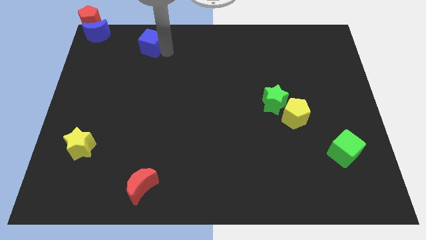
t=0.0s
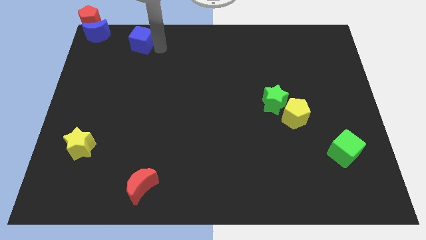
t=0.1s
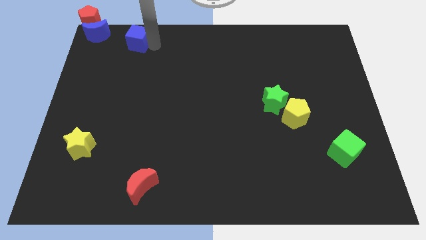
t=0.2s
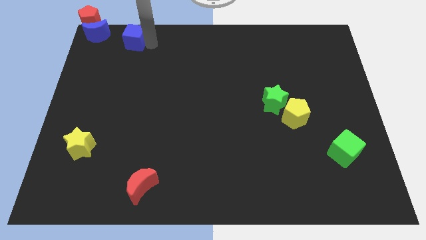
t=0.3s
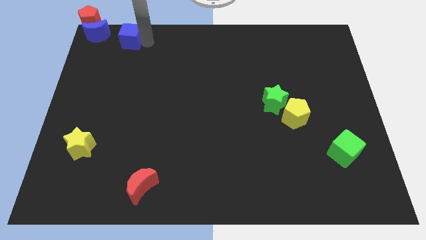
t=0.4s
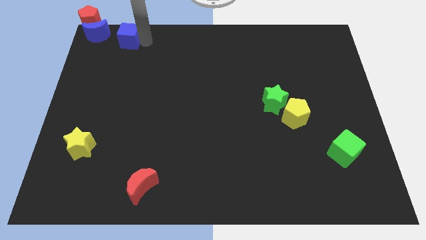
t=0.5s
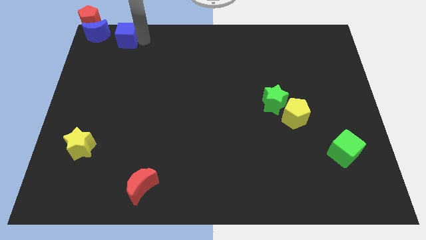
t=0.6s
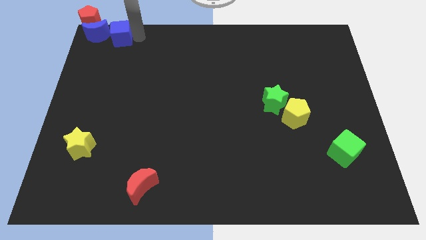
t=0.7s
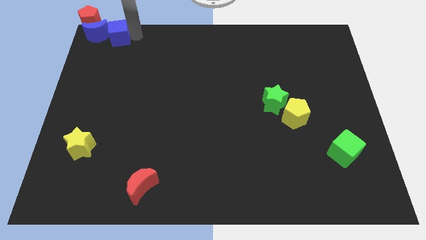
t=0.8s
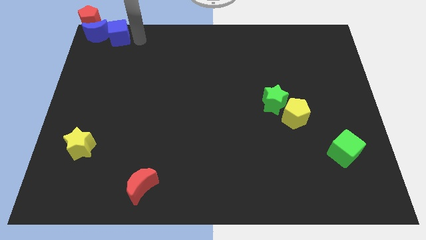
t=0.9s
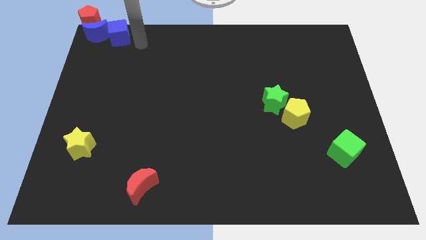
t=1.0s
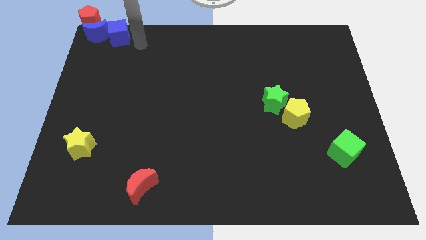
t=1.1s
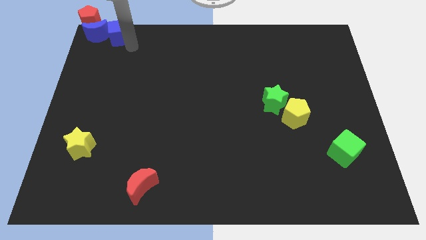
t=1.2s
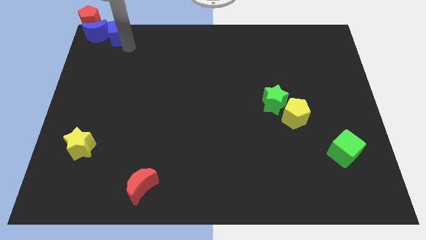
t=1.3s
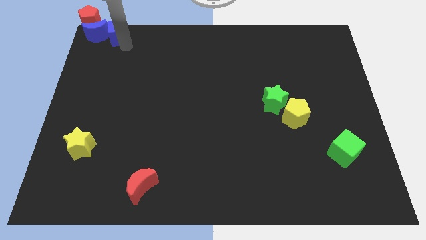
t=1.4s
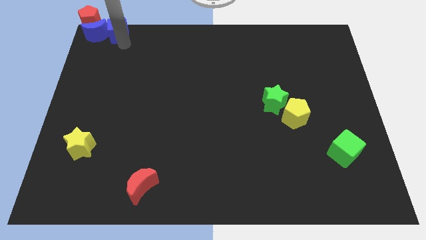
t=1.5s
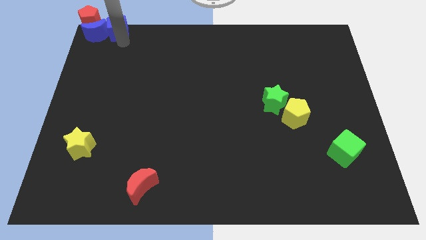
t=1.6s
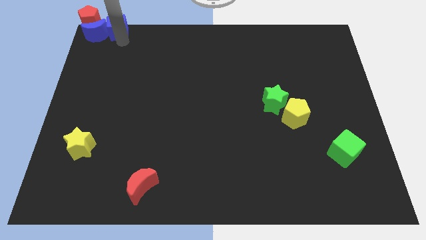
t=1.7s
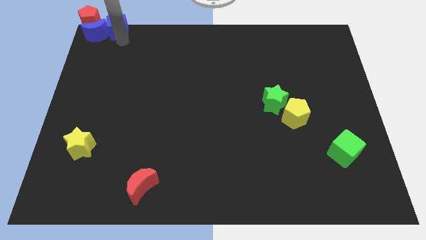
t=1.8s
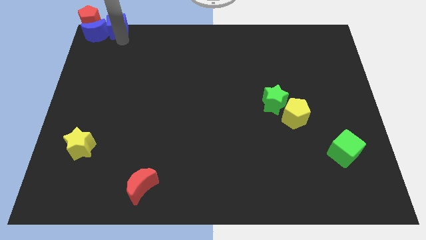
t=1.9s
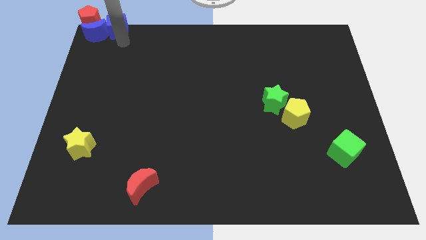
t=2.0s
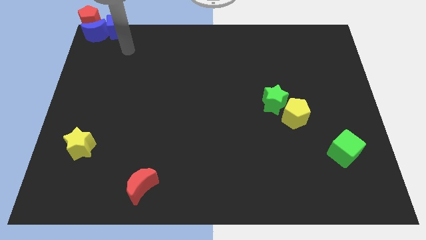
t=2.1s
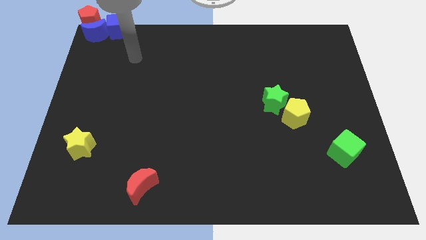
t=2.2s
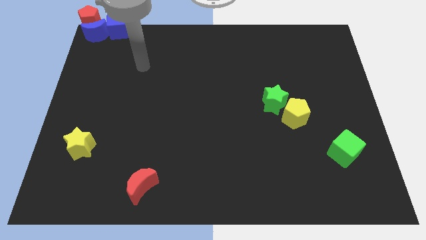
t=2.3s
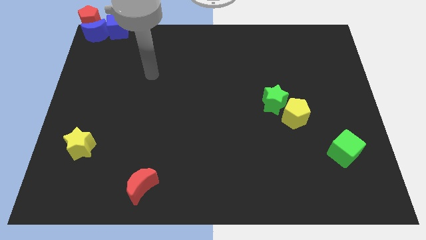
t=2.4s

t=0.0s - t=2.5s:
push the blue cube to the right of blue moon

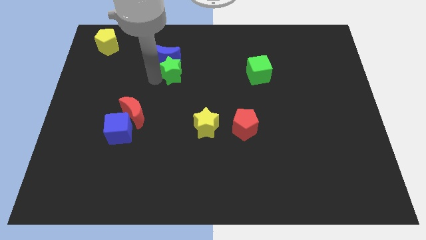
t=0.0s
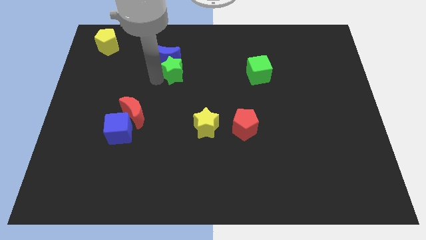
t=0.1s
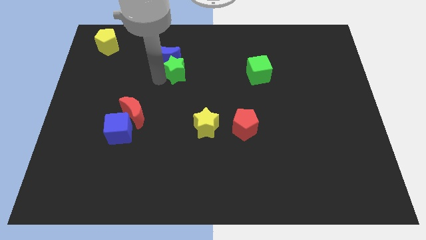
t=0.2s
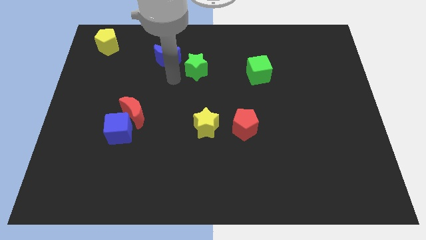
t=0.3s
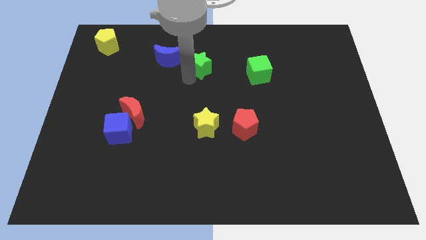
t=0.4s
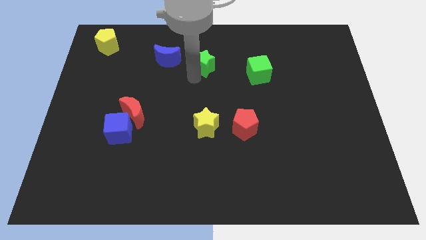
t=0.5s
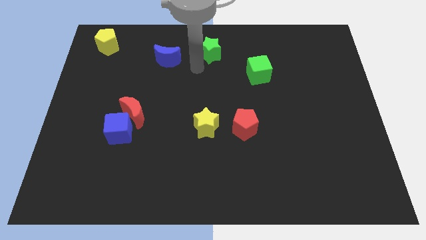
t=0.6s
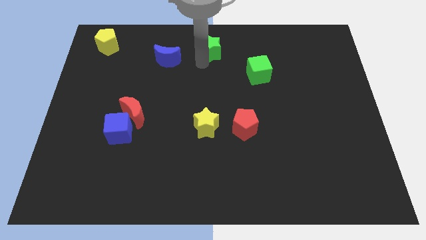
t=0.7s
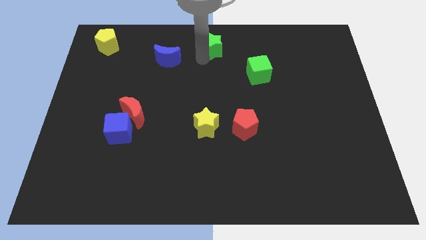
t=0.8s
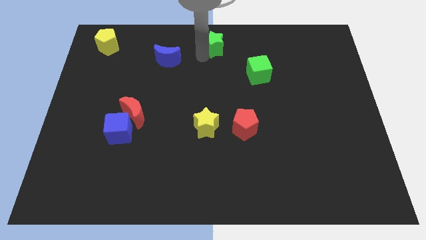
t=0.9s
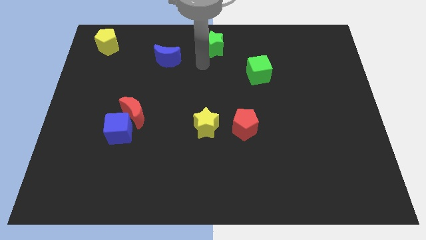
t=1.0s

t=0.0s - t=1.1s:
bring the green star at the top center of the table

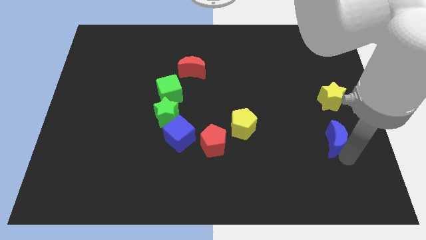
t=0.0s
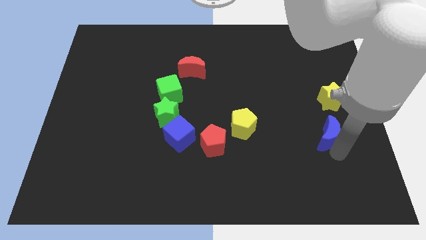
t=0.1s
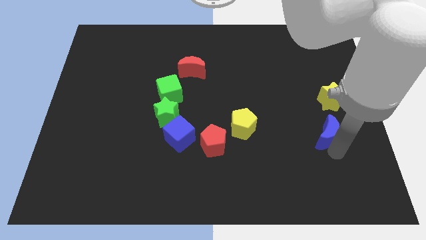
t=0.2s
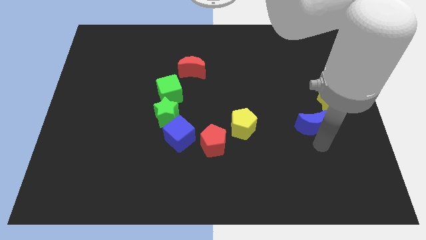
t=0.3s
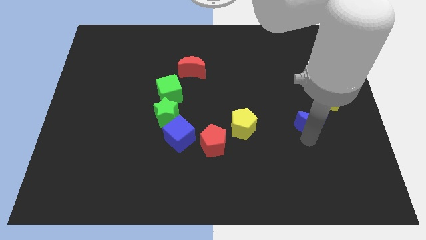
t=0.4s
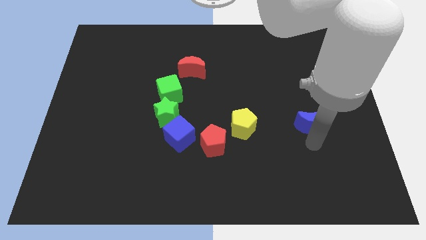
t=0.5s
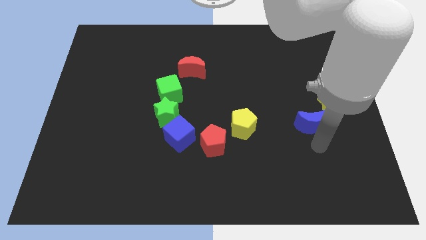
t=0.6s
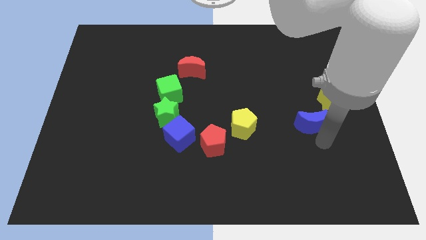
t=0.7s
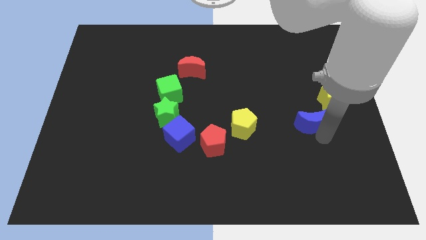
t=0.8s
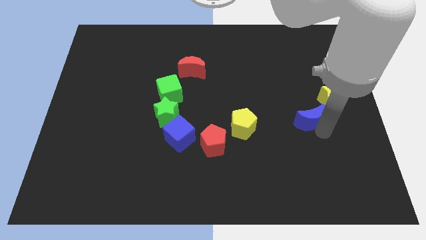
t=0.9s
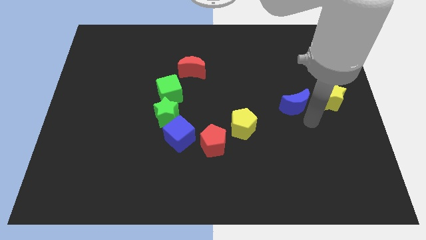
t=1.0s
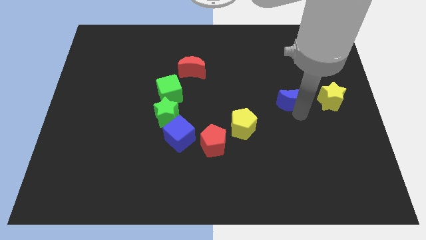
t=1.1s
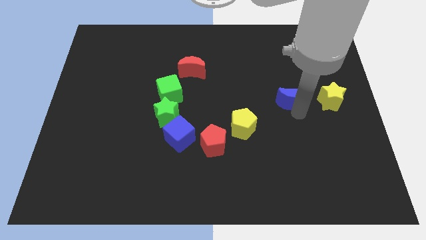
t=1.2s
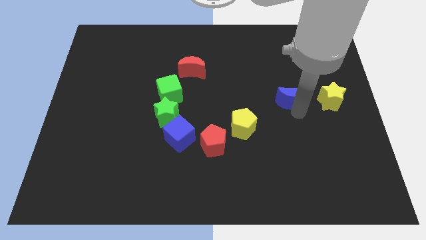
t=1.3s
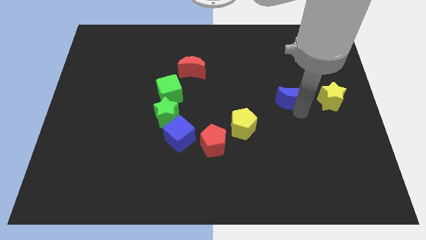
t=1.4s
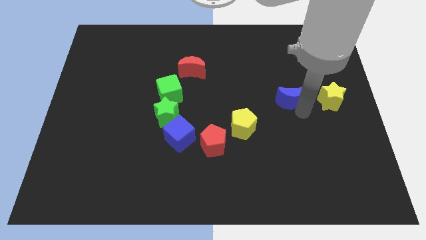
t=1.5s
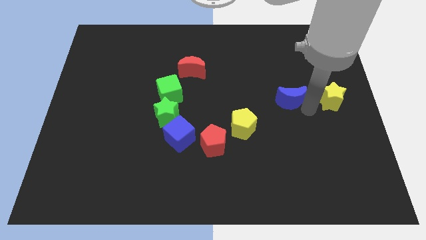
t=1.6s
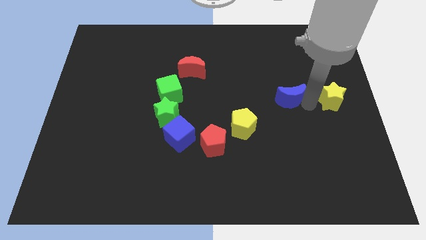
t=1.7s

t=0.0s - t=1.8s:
push the blue crescent to the left of the yellow star

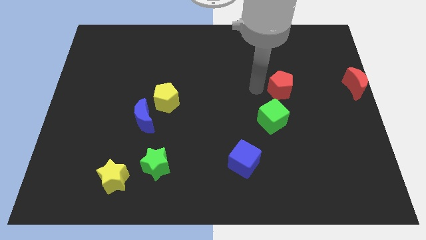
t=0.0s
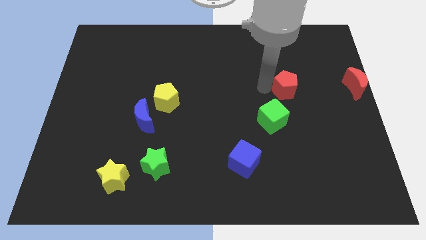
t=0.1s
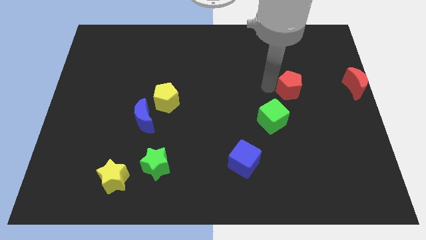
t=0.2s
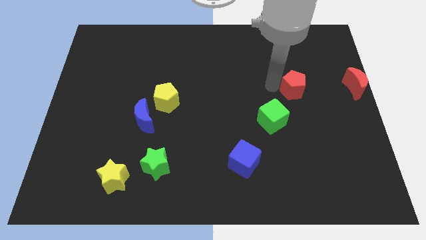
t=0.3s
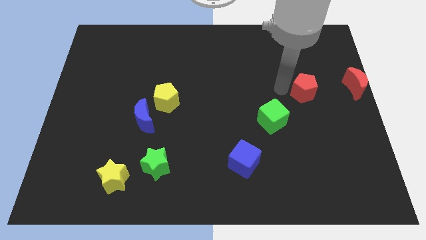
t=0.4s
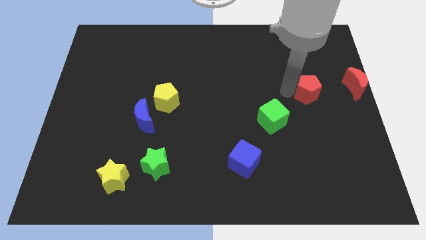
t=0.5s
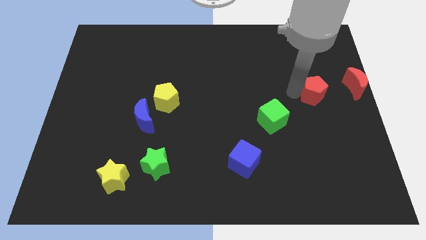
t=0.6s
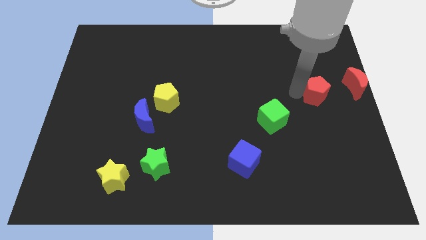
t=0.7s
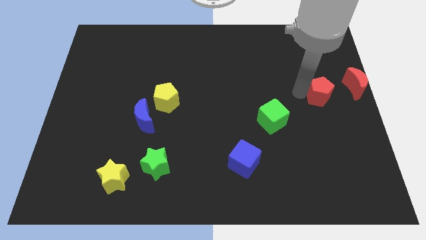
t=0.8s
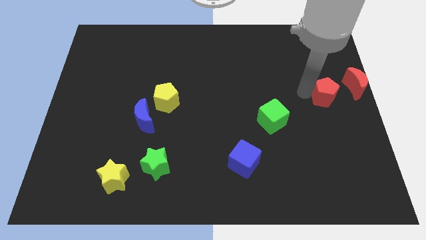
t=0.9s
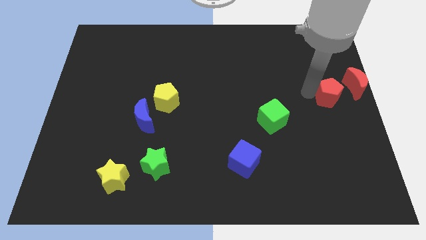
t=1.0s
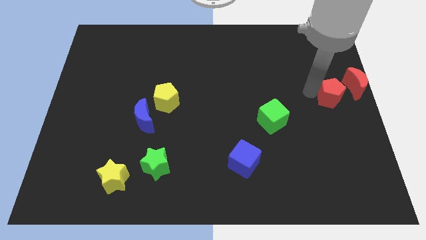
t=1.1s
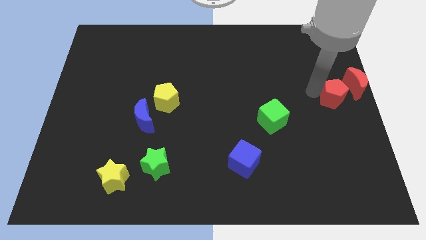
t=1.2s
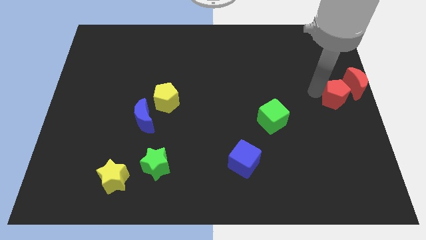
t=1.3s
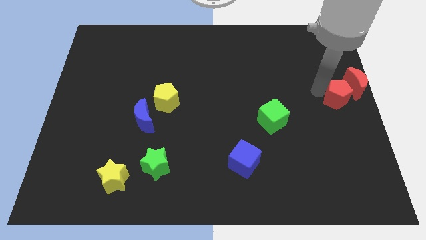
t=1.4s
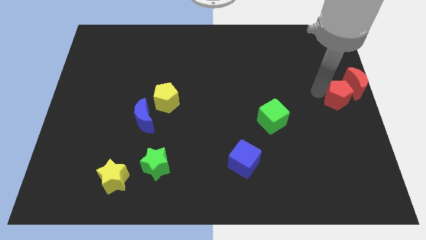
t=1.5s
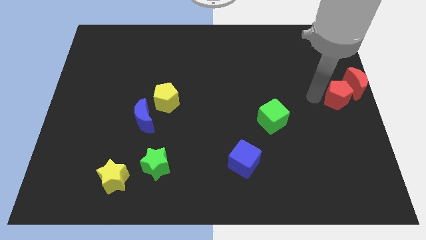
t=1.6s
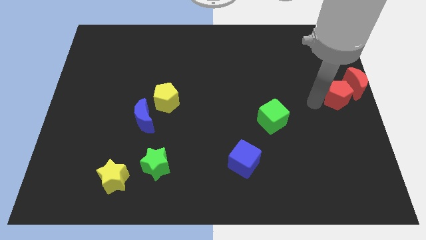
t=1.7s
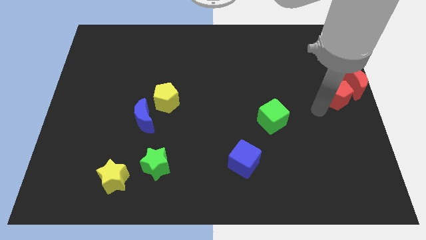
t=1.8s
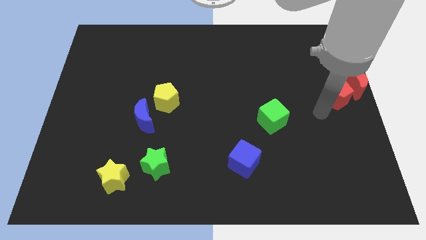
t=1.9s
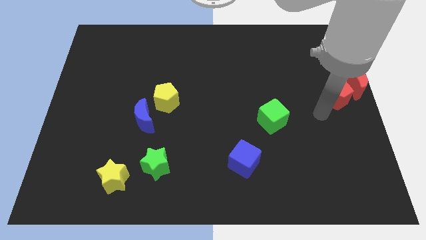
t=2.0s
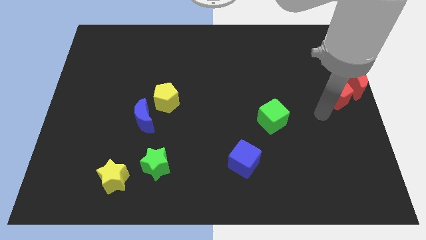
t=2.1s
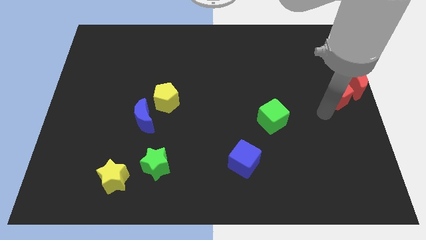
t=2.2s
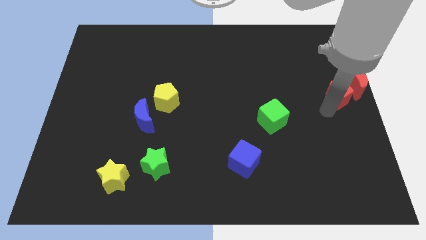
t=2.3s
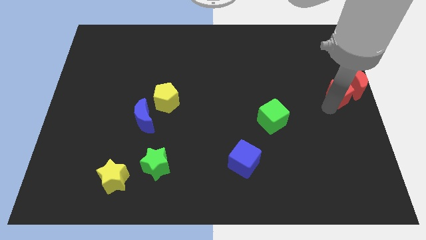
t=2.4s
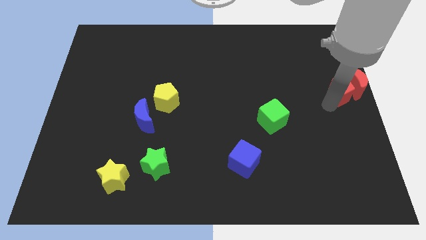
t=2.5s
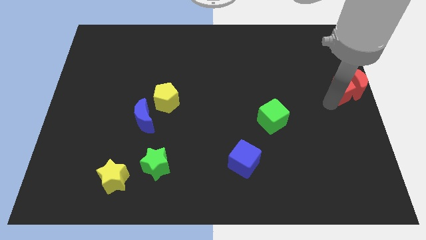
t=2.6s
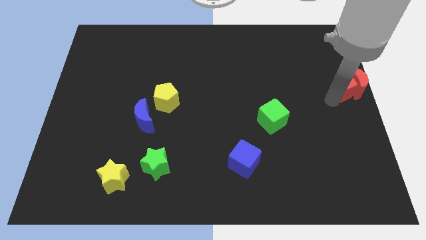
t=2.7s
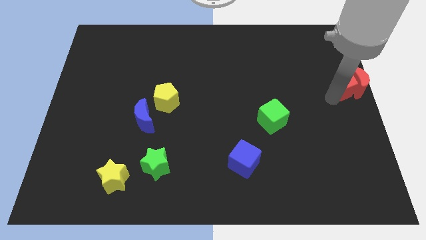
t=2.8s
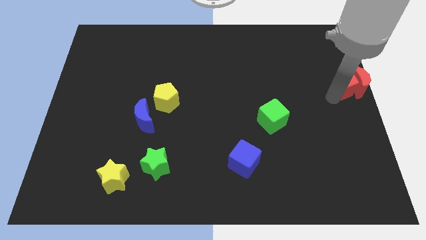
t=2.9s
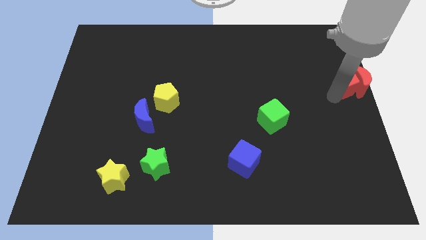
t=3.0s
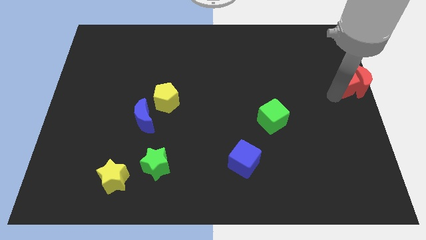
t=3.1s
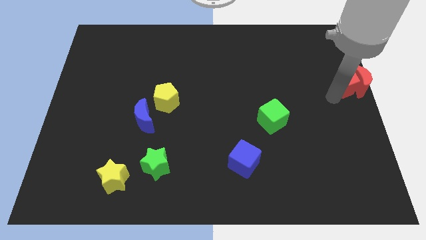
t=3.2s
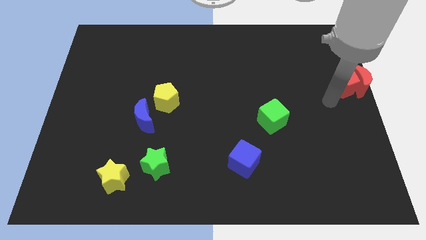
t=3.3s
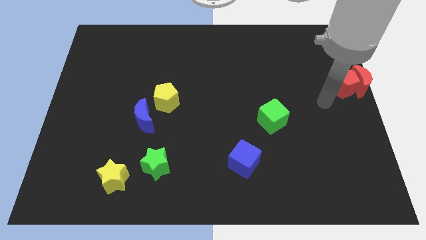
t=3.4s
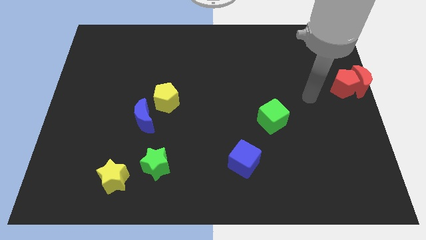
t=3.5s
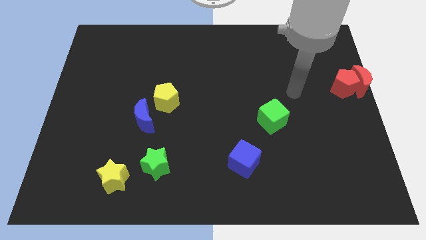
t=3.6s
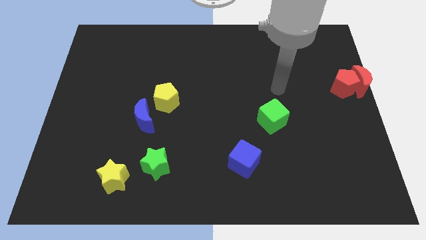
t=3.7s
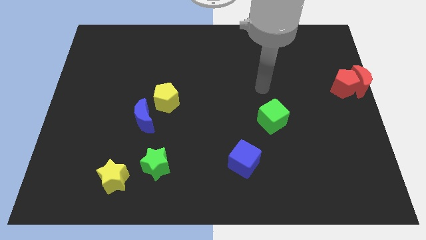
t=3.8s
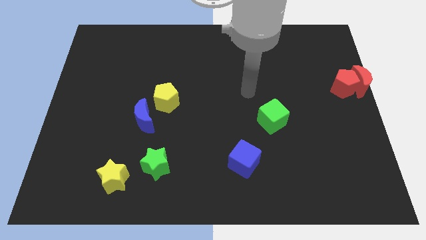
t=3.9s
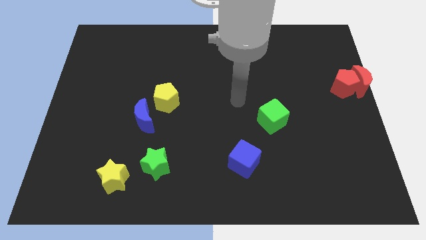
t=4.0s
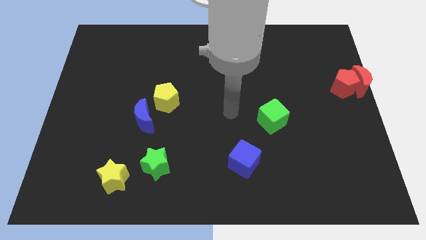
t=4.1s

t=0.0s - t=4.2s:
move the red pentagon into the red moon
